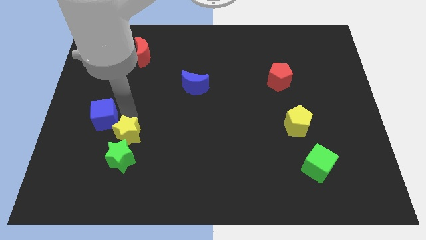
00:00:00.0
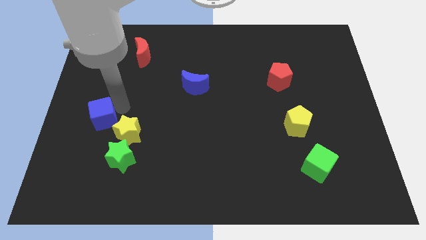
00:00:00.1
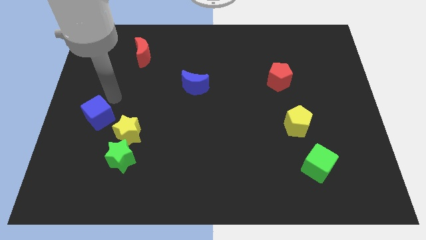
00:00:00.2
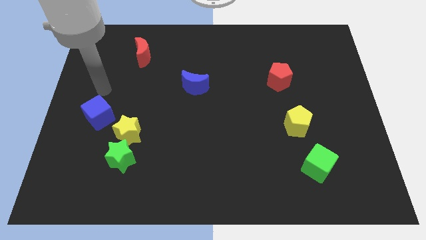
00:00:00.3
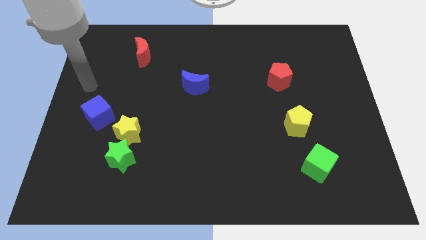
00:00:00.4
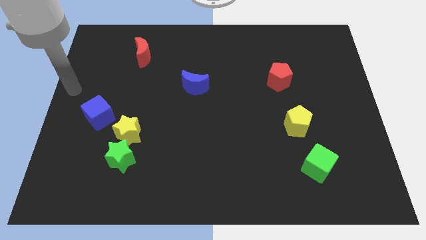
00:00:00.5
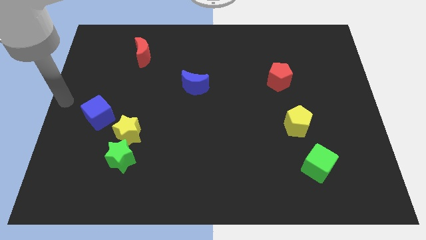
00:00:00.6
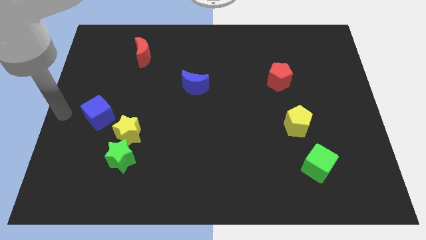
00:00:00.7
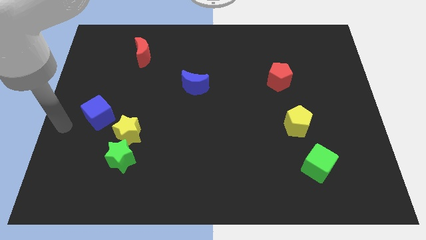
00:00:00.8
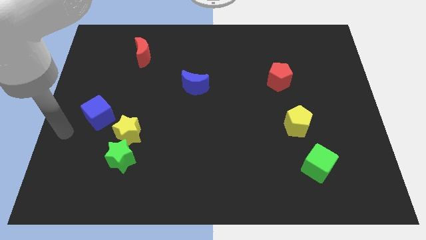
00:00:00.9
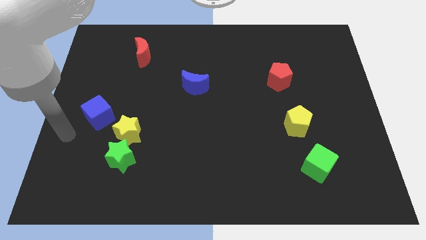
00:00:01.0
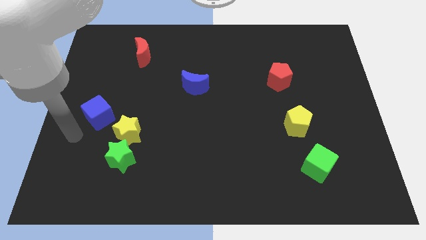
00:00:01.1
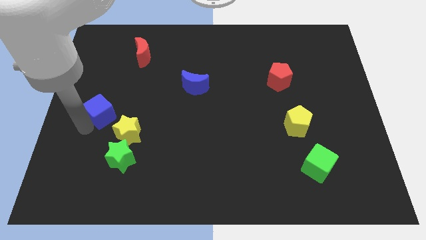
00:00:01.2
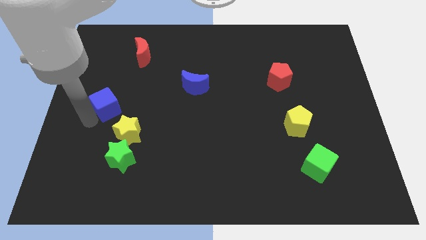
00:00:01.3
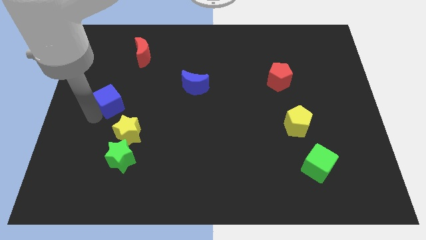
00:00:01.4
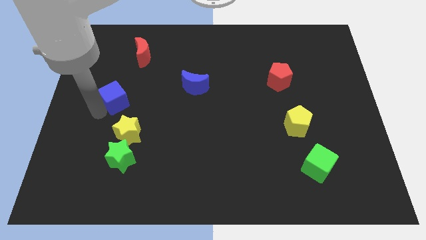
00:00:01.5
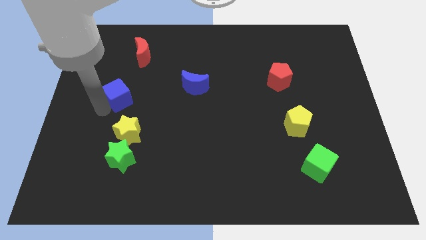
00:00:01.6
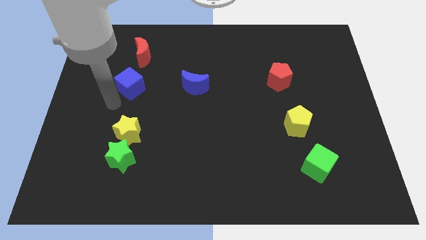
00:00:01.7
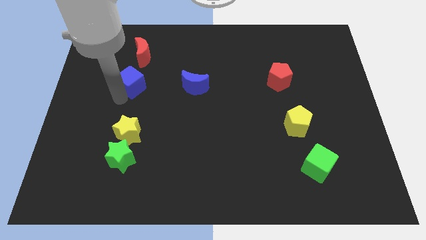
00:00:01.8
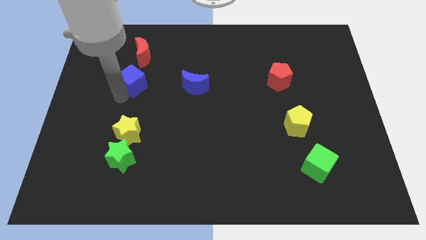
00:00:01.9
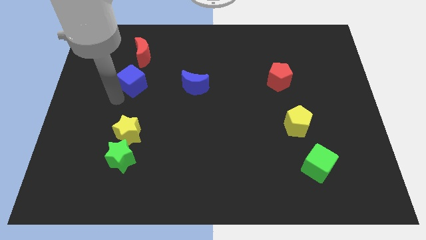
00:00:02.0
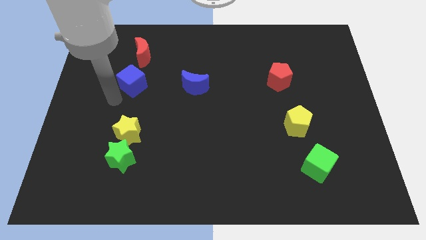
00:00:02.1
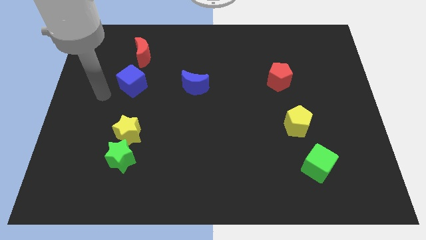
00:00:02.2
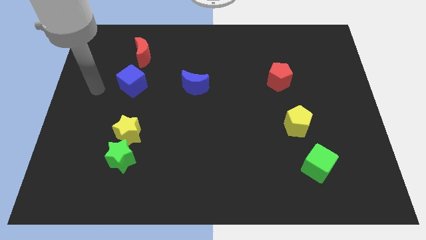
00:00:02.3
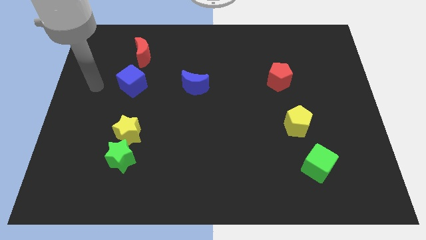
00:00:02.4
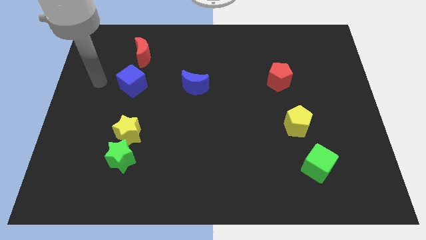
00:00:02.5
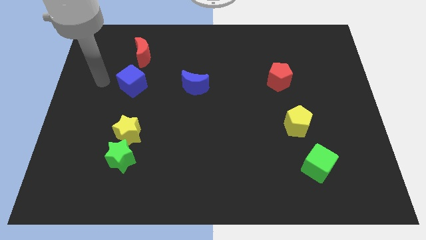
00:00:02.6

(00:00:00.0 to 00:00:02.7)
push the blue cube below the red crescent

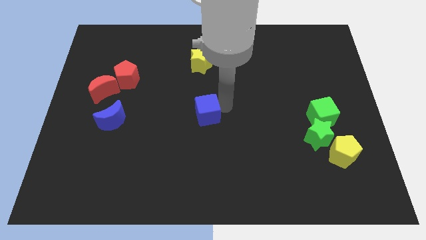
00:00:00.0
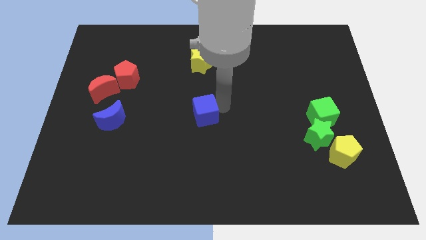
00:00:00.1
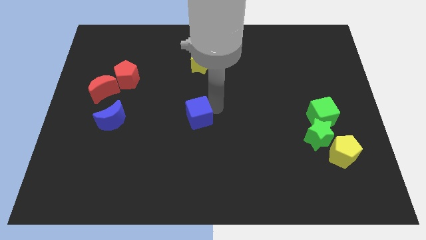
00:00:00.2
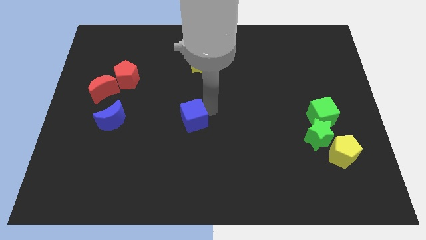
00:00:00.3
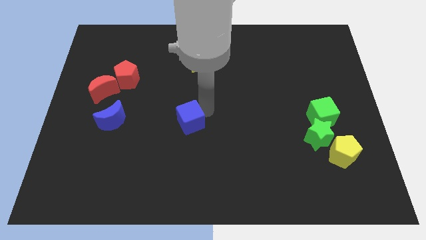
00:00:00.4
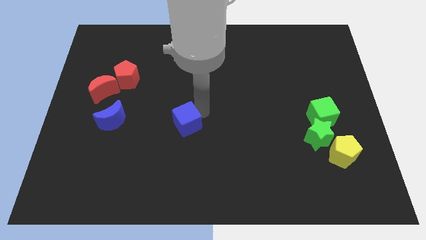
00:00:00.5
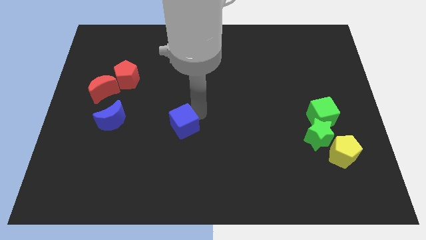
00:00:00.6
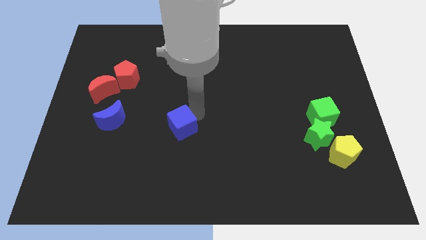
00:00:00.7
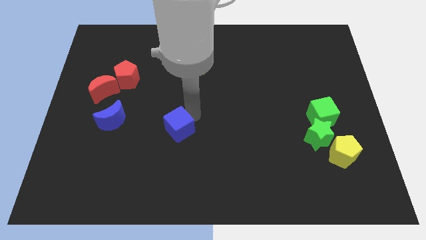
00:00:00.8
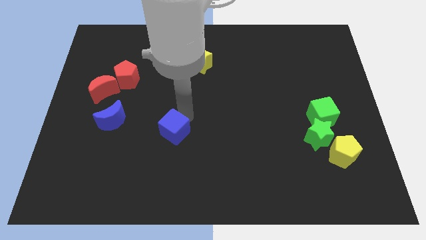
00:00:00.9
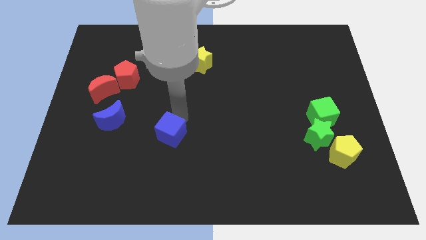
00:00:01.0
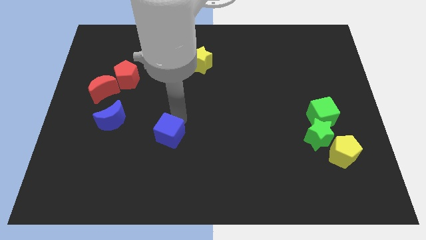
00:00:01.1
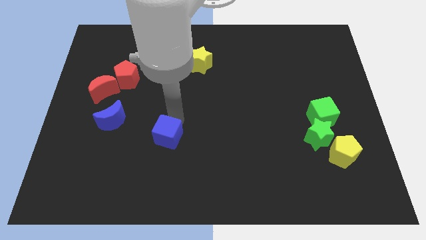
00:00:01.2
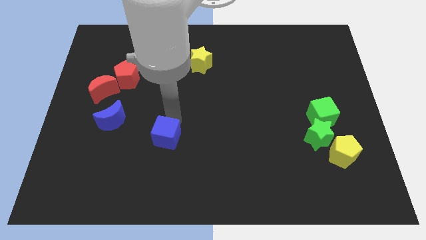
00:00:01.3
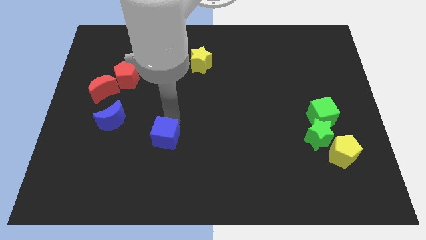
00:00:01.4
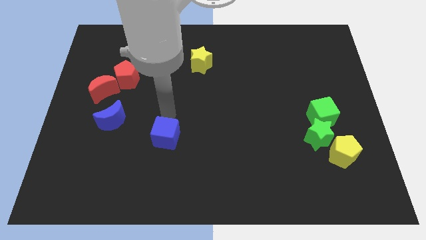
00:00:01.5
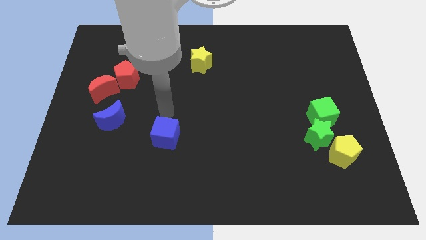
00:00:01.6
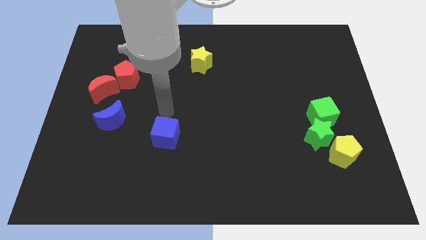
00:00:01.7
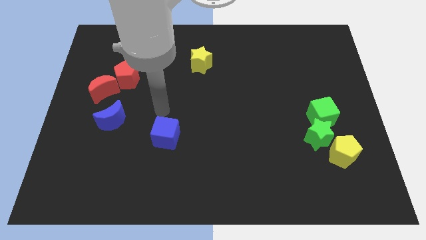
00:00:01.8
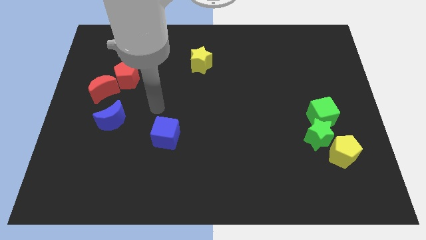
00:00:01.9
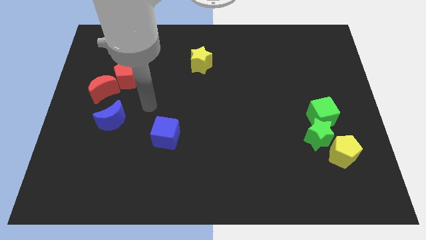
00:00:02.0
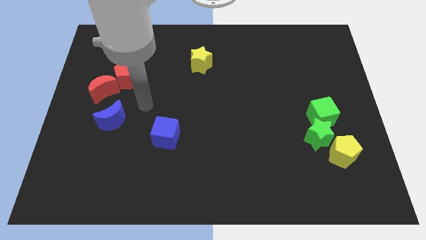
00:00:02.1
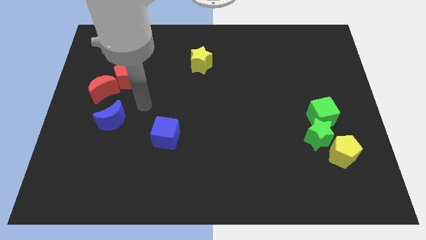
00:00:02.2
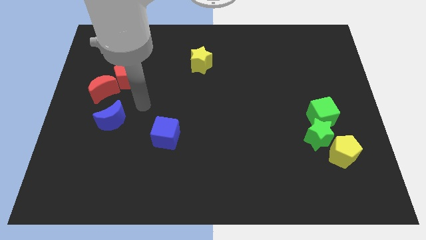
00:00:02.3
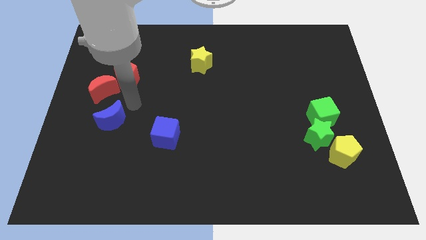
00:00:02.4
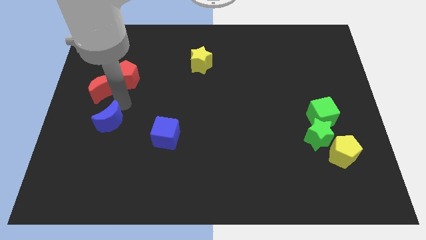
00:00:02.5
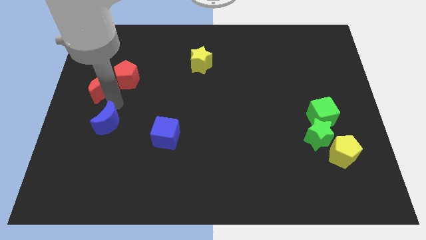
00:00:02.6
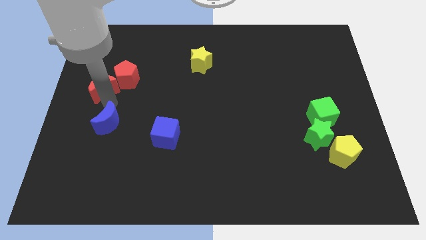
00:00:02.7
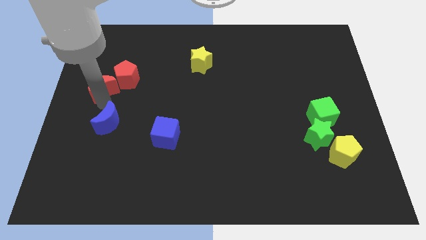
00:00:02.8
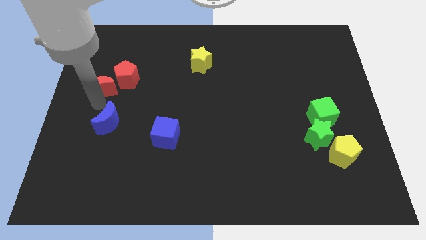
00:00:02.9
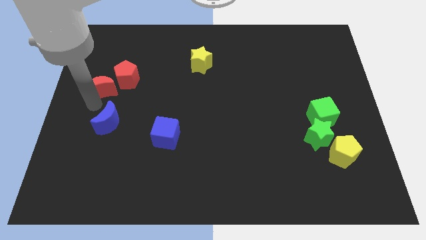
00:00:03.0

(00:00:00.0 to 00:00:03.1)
move the blue cube slightly towards the bottom of the board

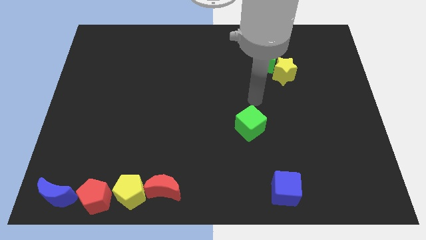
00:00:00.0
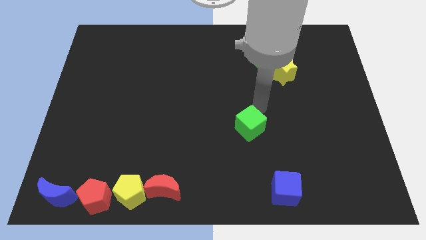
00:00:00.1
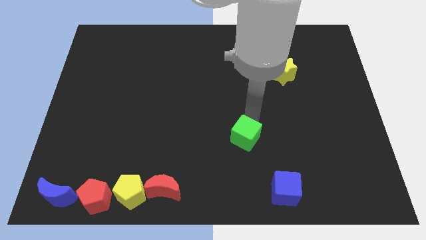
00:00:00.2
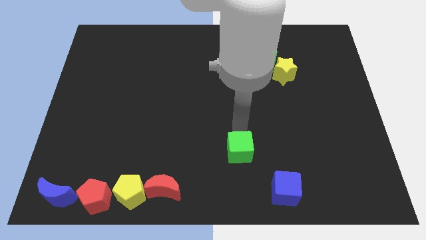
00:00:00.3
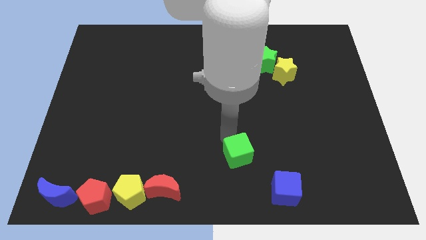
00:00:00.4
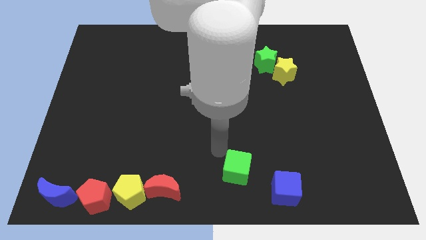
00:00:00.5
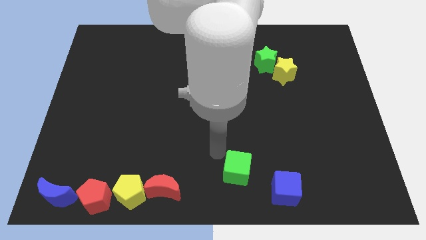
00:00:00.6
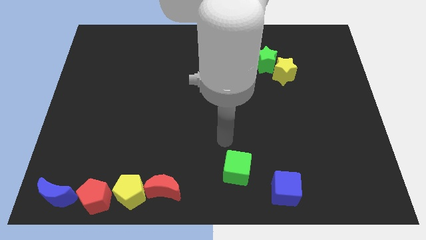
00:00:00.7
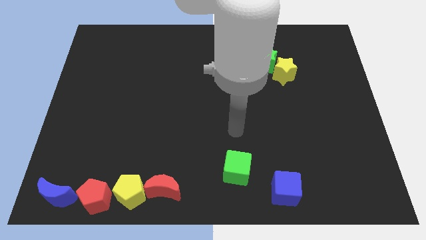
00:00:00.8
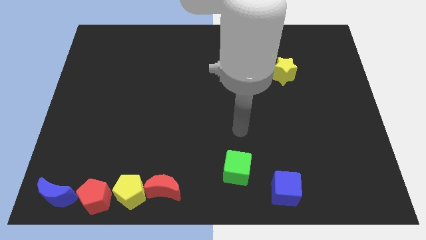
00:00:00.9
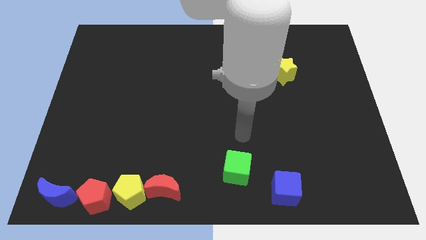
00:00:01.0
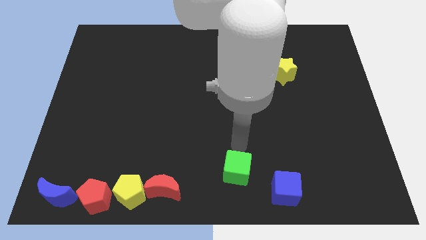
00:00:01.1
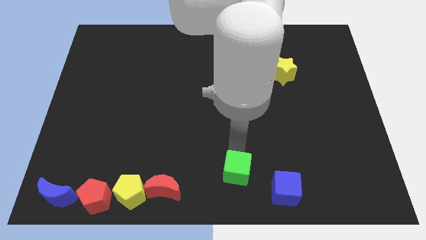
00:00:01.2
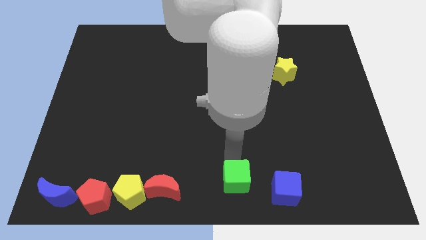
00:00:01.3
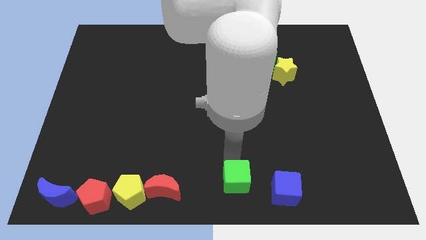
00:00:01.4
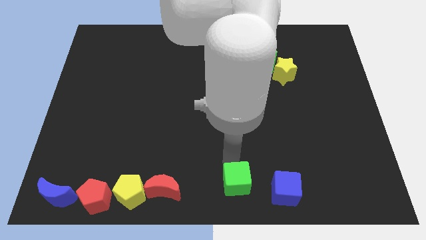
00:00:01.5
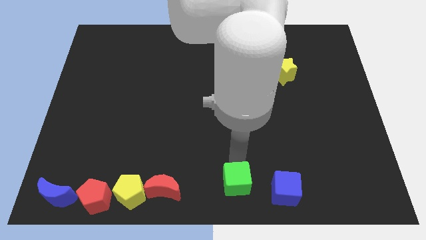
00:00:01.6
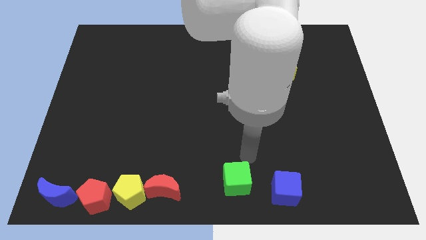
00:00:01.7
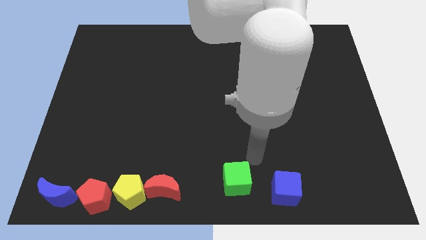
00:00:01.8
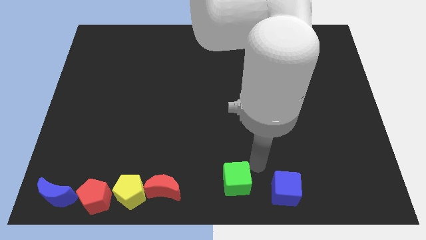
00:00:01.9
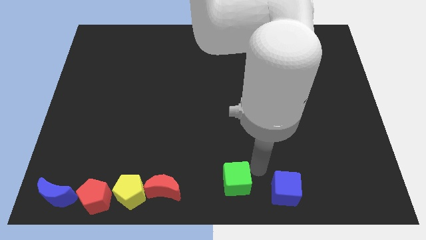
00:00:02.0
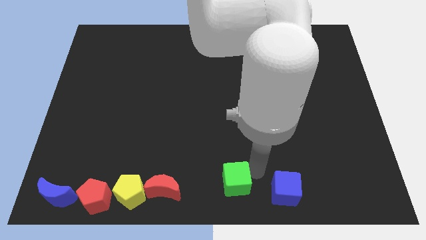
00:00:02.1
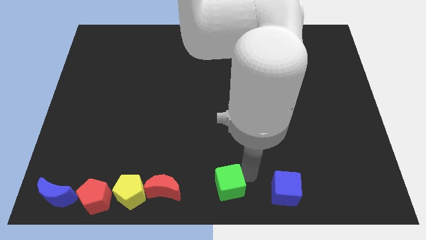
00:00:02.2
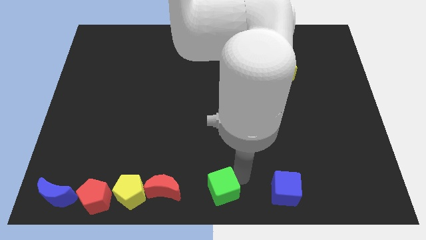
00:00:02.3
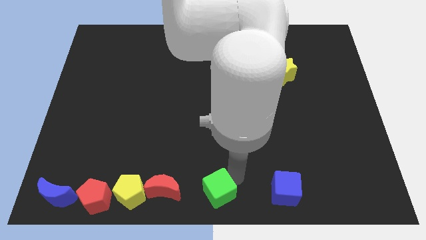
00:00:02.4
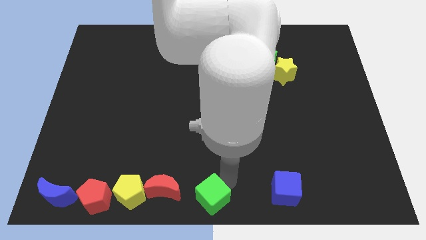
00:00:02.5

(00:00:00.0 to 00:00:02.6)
push the green block at the bottom center of the board

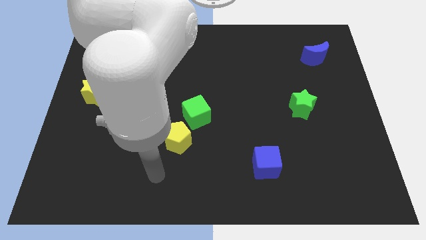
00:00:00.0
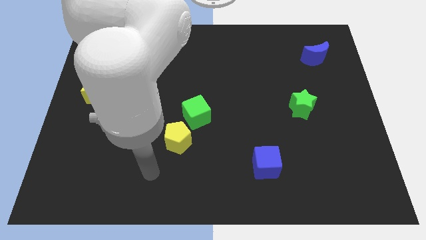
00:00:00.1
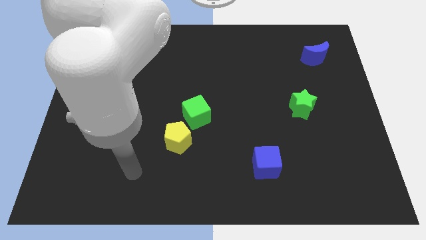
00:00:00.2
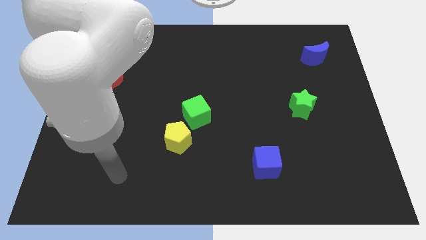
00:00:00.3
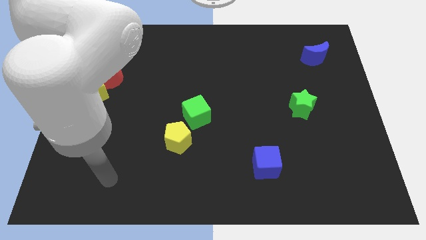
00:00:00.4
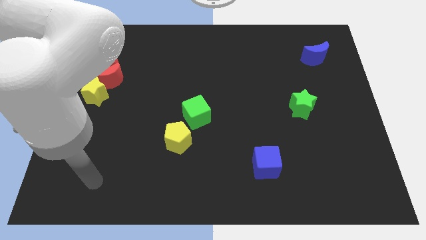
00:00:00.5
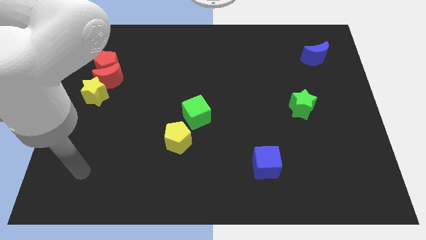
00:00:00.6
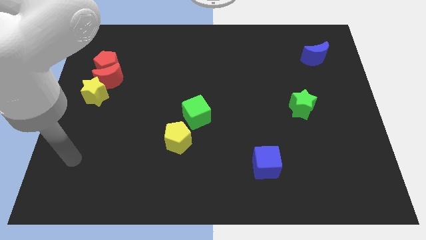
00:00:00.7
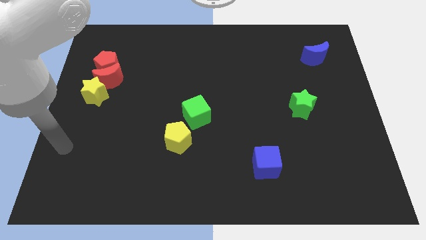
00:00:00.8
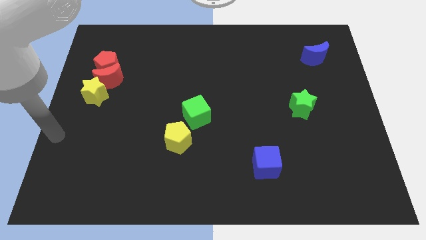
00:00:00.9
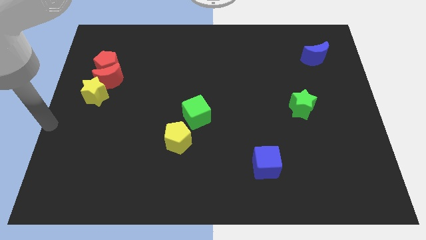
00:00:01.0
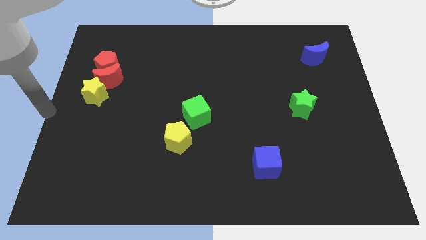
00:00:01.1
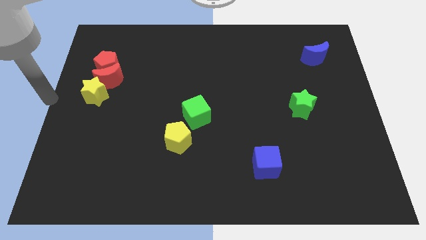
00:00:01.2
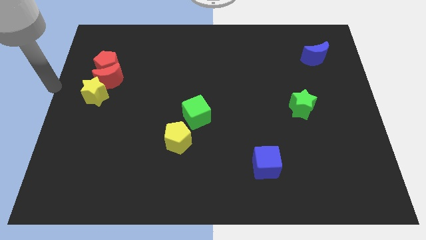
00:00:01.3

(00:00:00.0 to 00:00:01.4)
move your arm away from the yellow pentagon
